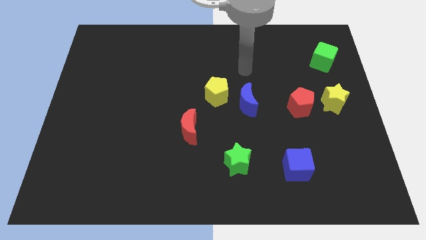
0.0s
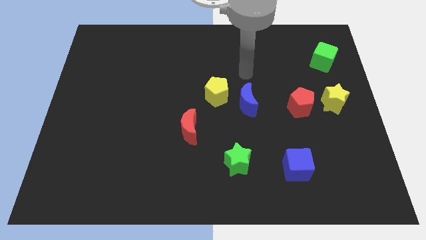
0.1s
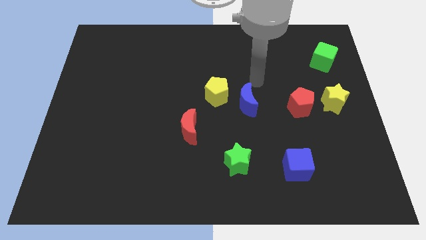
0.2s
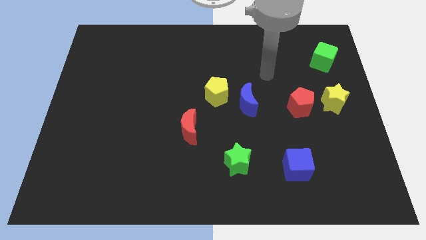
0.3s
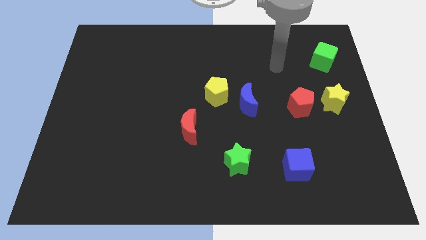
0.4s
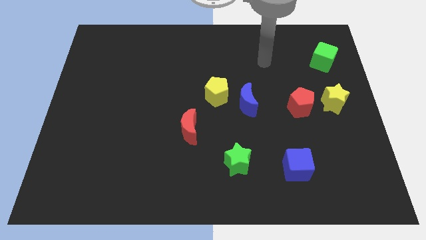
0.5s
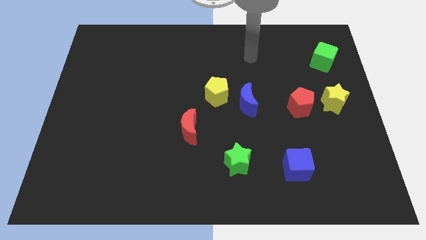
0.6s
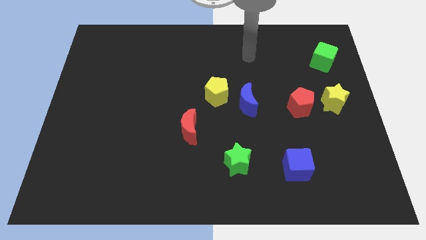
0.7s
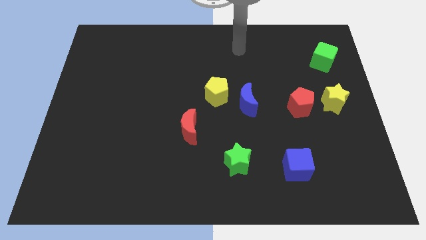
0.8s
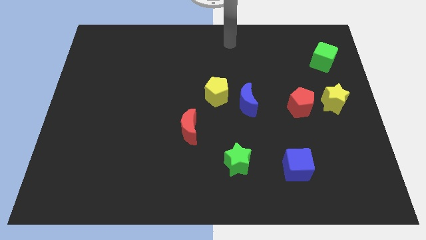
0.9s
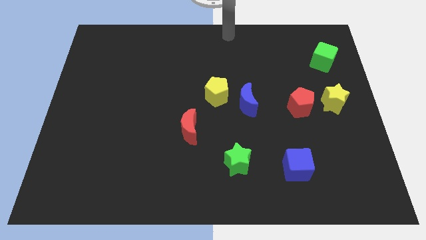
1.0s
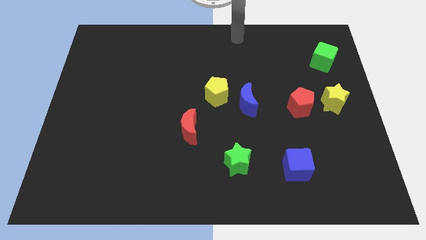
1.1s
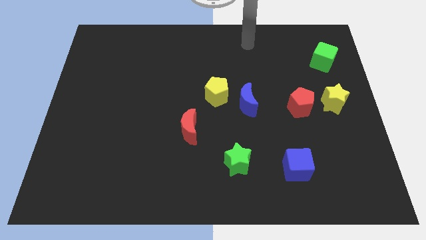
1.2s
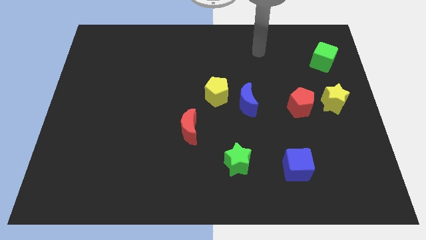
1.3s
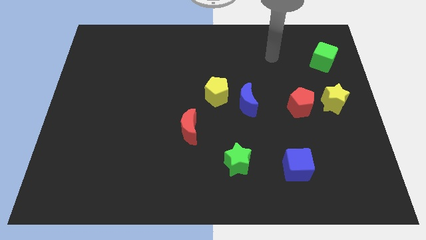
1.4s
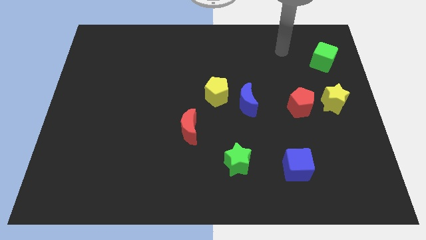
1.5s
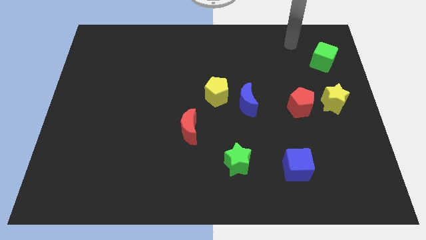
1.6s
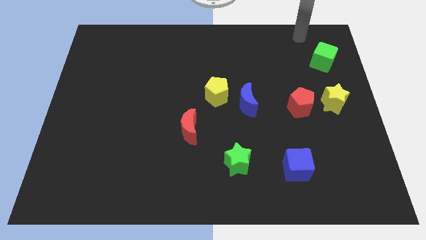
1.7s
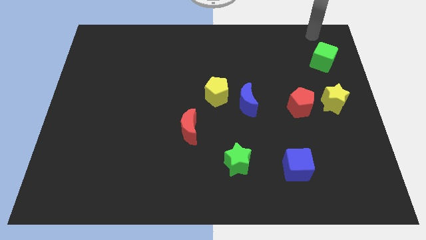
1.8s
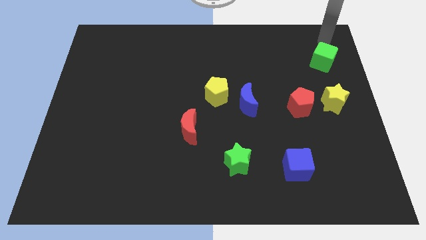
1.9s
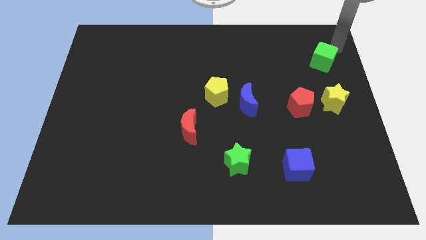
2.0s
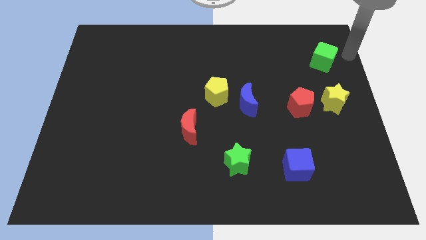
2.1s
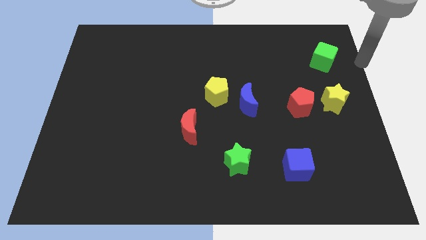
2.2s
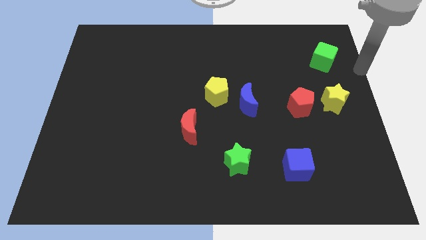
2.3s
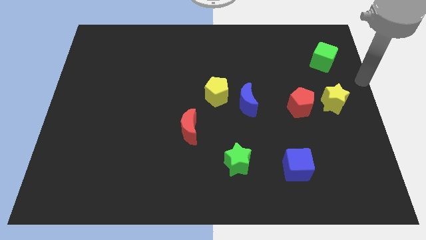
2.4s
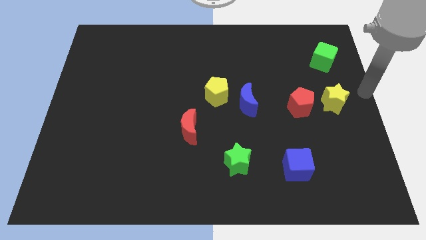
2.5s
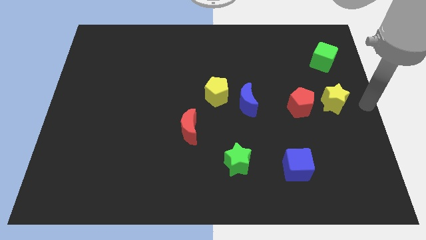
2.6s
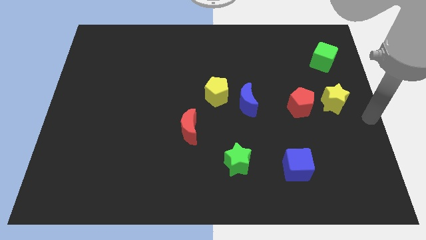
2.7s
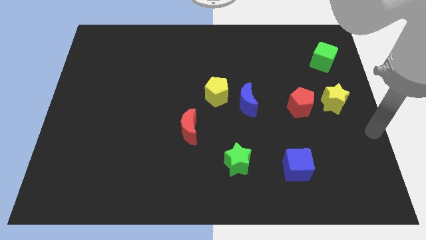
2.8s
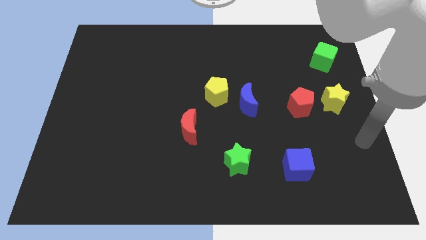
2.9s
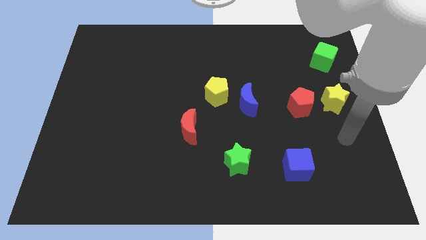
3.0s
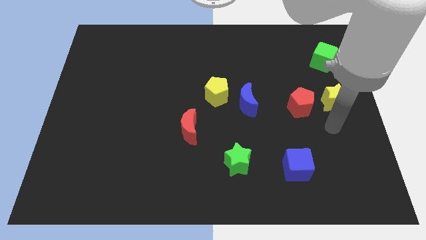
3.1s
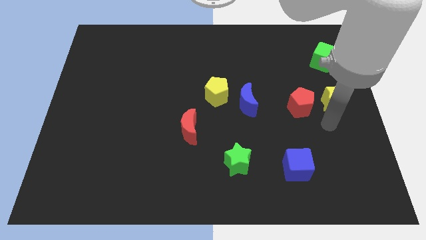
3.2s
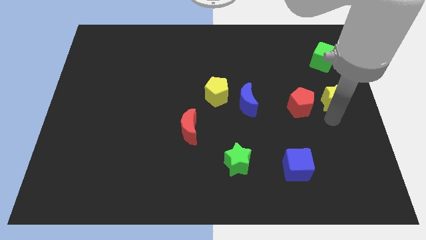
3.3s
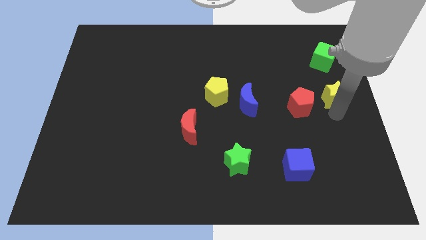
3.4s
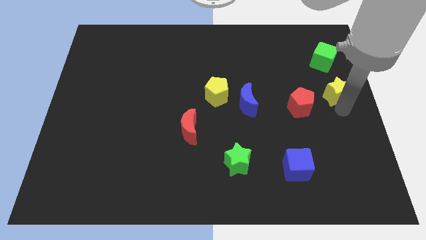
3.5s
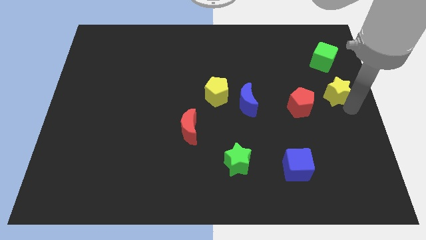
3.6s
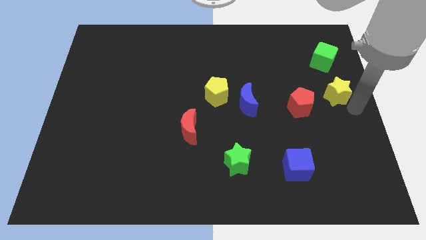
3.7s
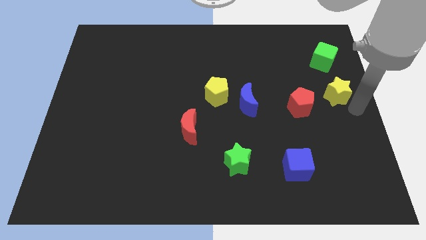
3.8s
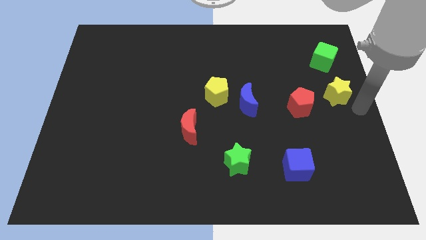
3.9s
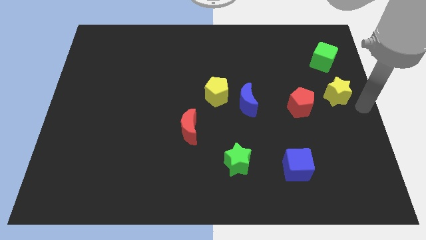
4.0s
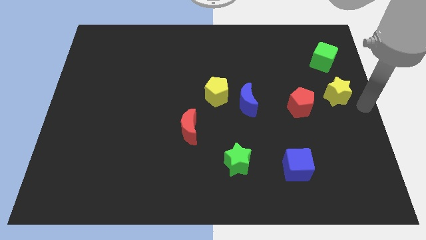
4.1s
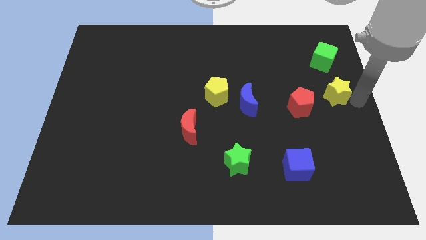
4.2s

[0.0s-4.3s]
place the arm towards the right side of the yellow star

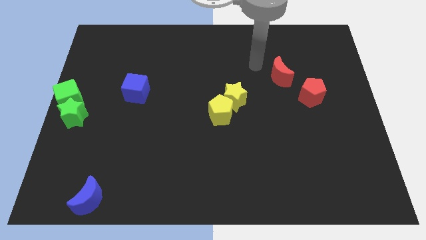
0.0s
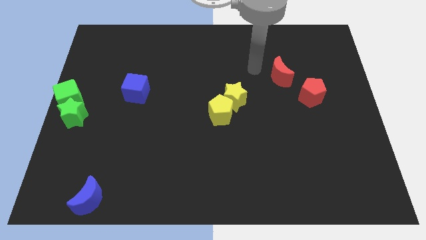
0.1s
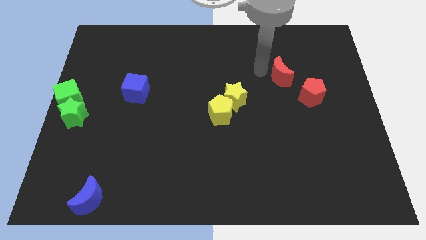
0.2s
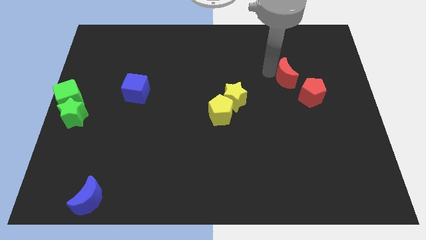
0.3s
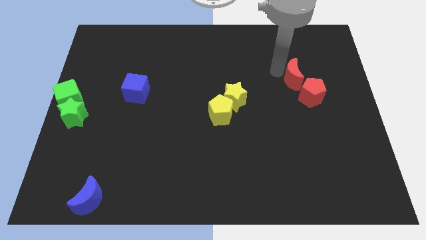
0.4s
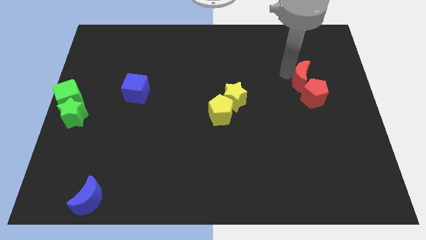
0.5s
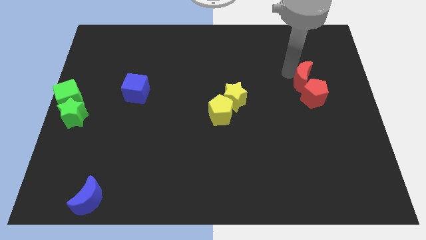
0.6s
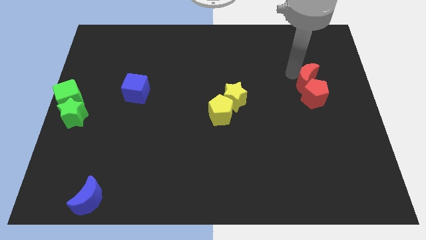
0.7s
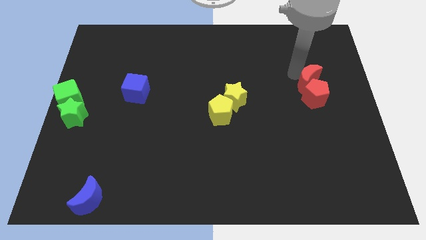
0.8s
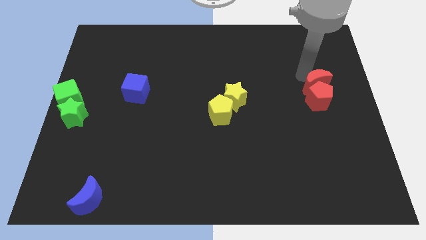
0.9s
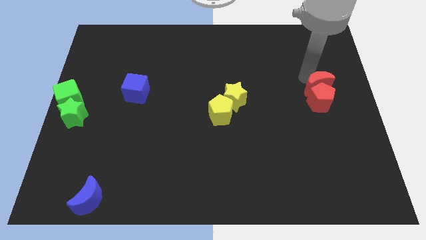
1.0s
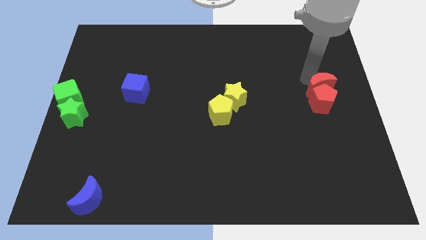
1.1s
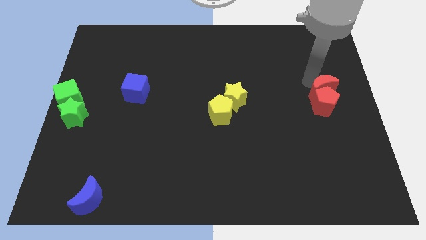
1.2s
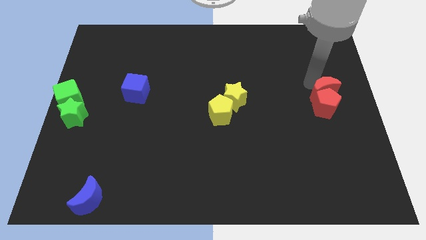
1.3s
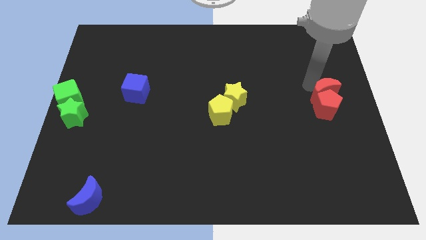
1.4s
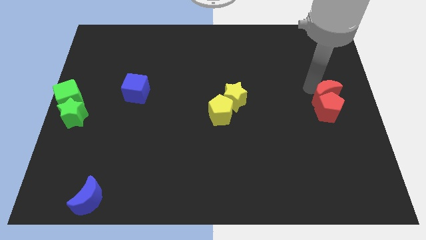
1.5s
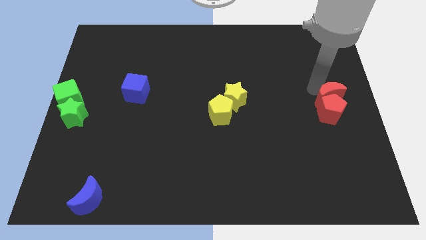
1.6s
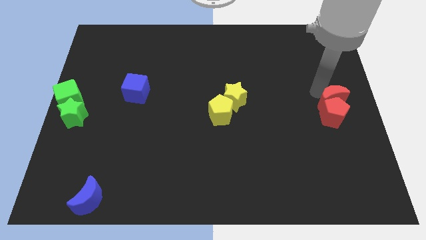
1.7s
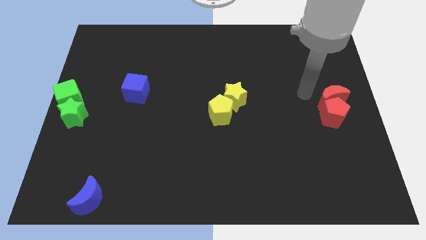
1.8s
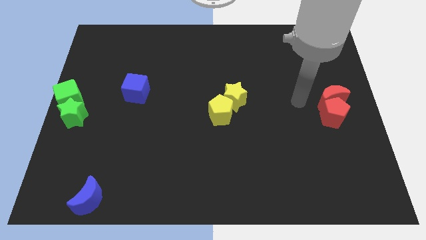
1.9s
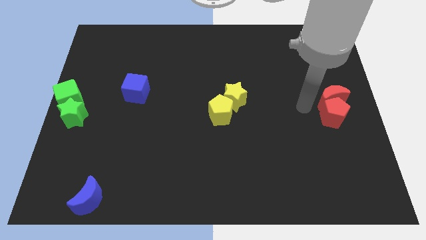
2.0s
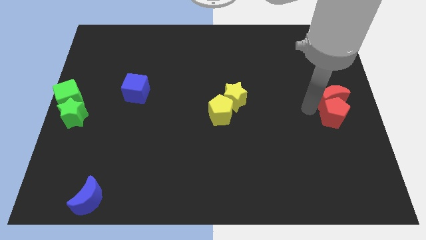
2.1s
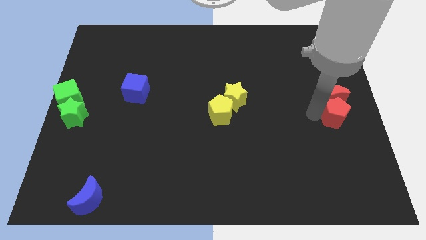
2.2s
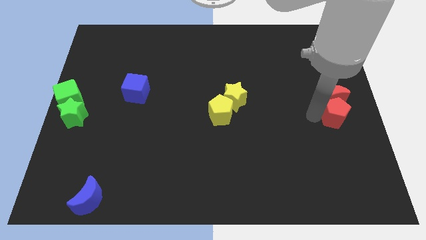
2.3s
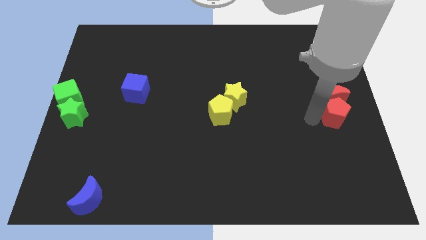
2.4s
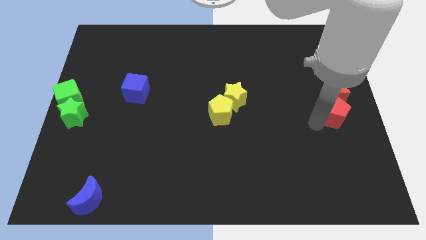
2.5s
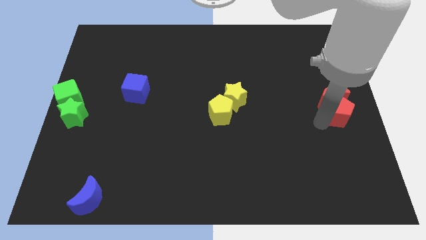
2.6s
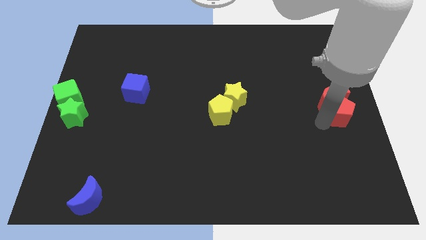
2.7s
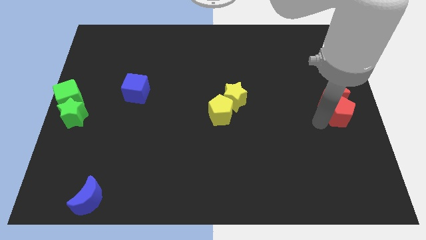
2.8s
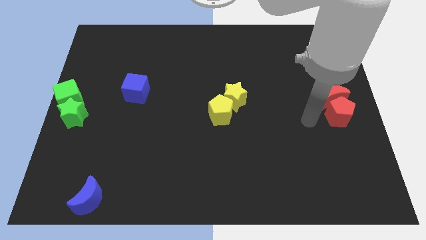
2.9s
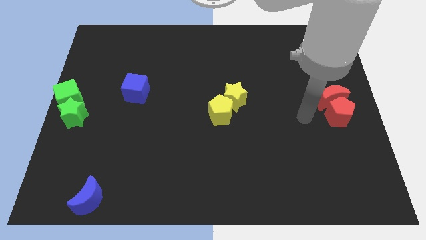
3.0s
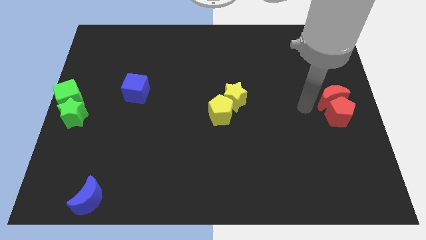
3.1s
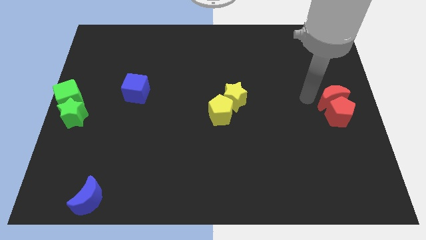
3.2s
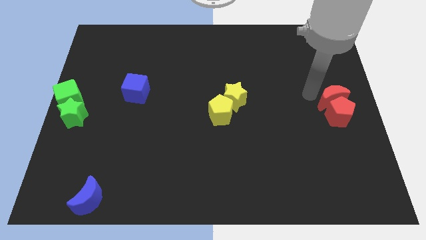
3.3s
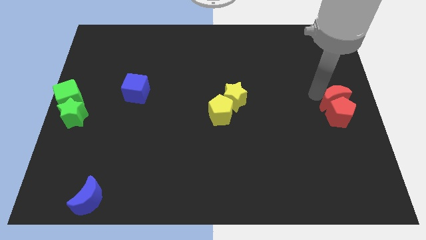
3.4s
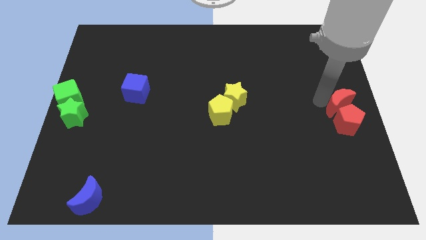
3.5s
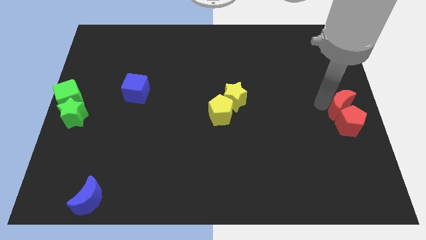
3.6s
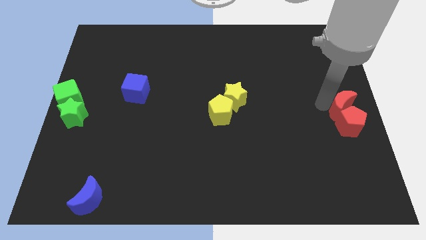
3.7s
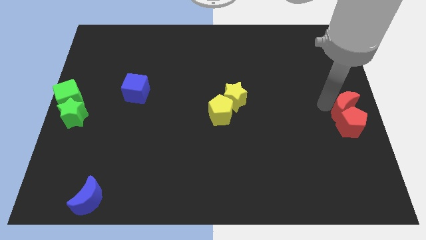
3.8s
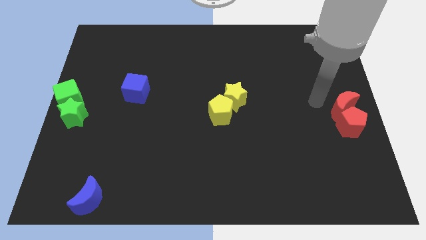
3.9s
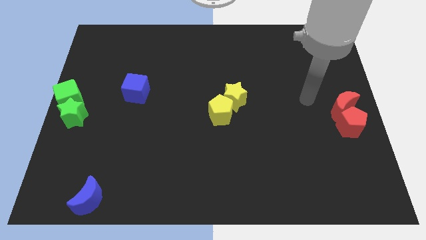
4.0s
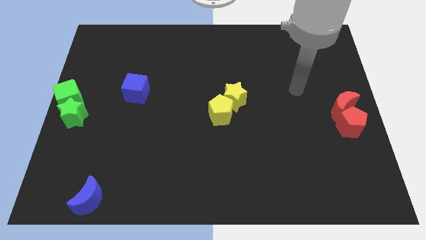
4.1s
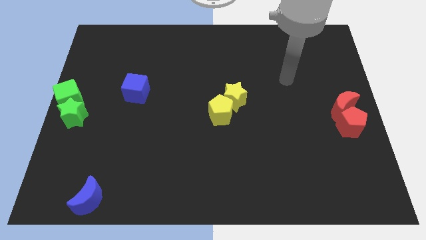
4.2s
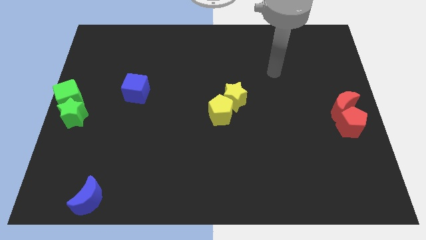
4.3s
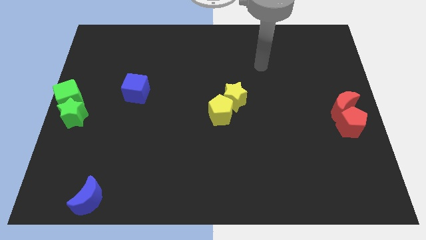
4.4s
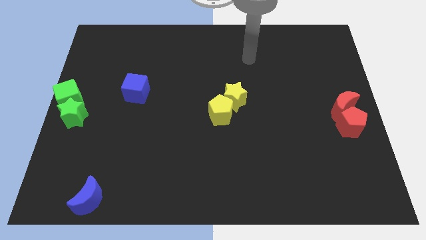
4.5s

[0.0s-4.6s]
move the red blocks to the right center of the board
